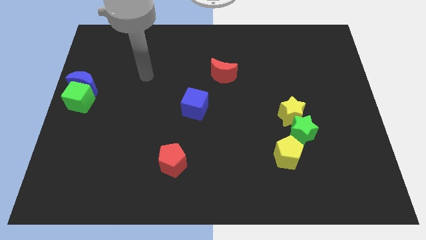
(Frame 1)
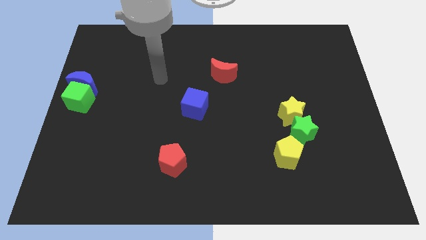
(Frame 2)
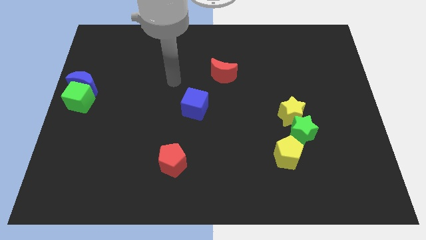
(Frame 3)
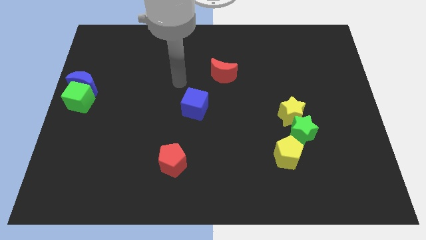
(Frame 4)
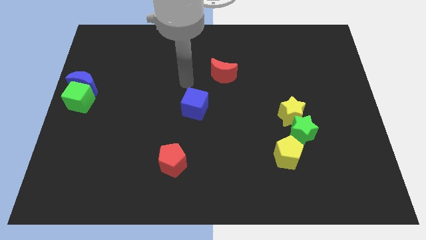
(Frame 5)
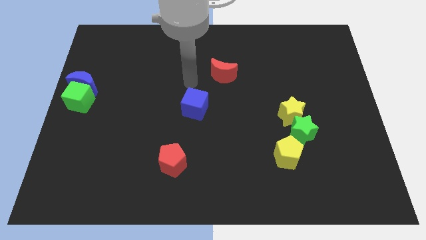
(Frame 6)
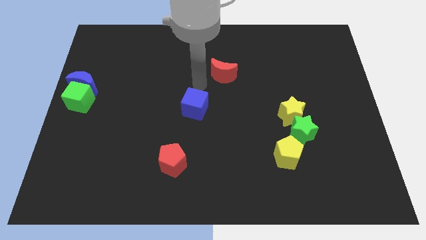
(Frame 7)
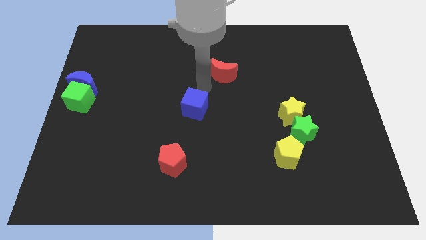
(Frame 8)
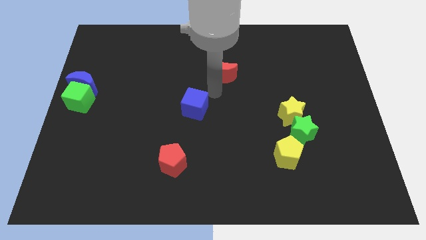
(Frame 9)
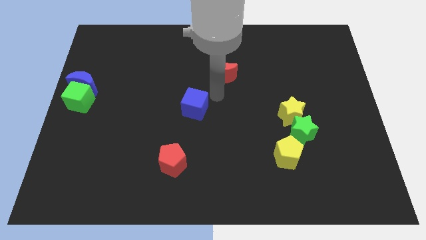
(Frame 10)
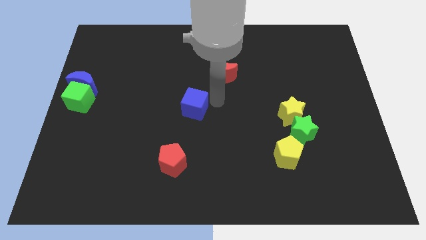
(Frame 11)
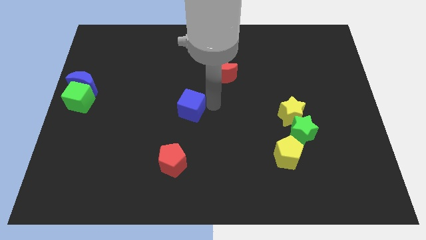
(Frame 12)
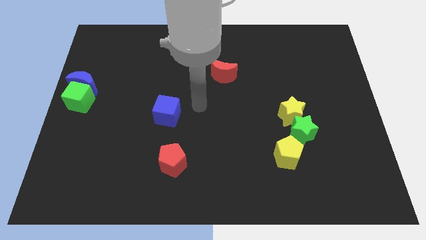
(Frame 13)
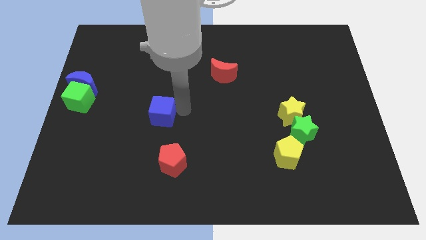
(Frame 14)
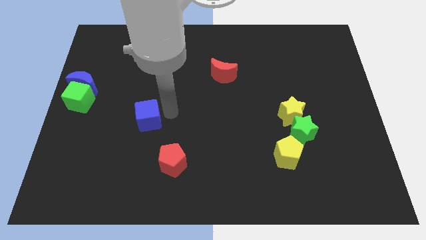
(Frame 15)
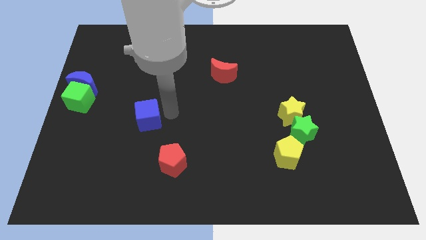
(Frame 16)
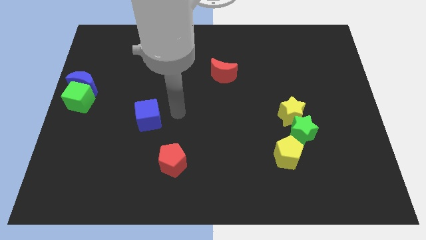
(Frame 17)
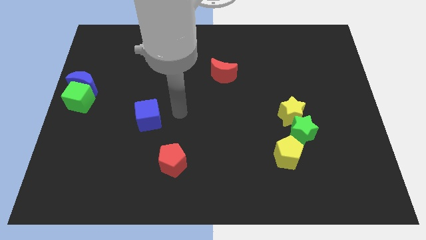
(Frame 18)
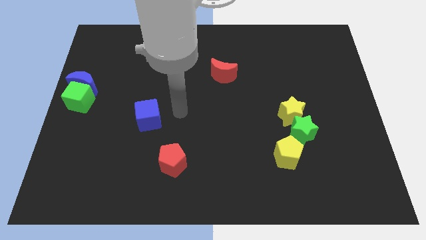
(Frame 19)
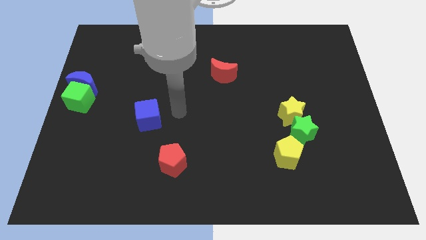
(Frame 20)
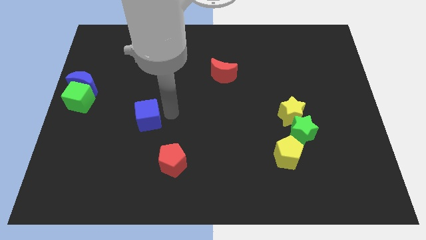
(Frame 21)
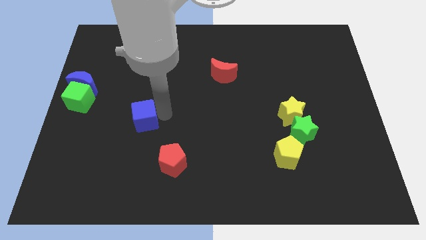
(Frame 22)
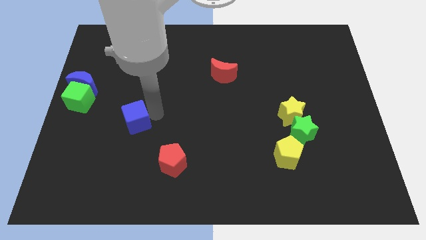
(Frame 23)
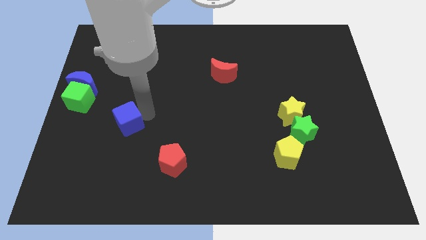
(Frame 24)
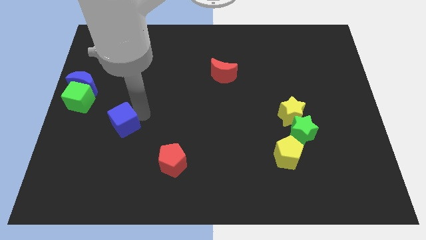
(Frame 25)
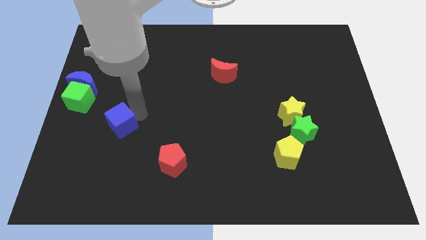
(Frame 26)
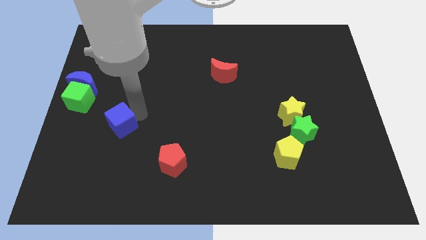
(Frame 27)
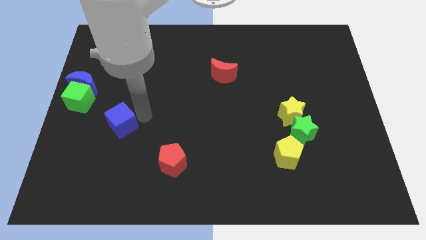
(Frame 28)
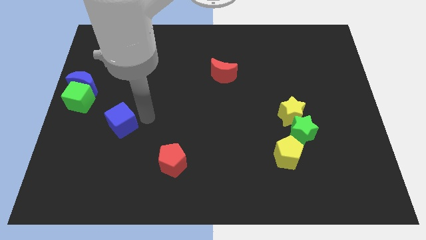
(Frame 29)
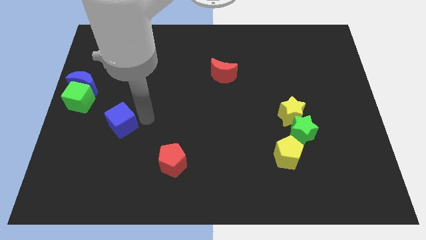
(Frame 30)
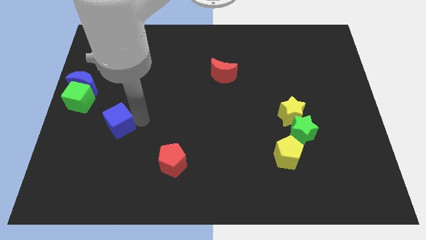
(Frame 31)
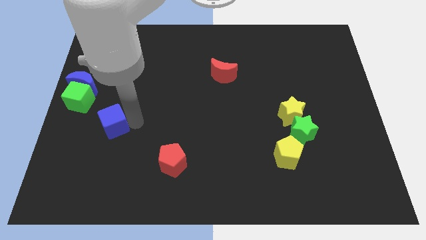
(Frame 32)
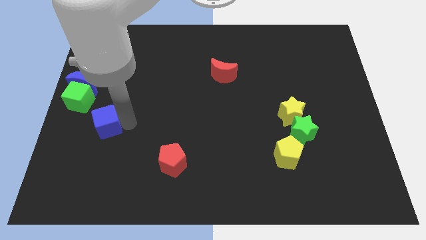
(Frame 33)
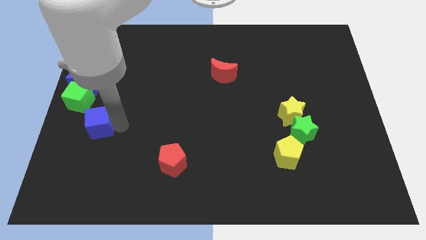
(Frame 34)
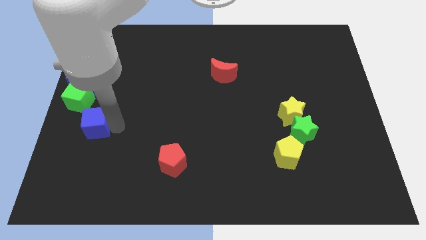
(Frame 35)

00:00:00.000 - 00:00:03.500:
move blue cube towards left

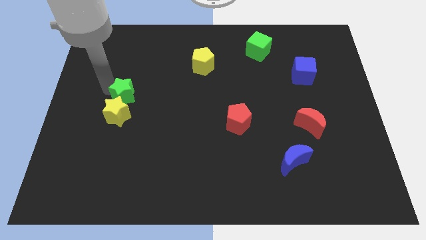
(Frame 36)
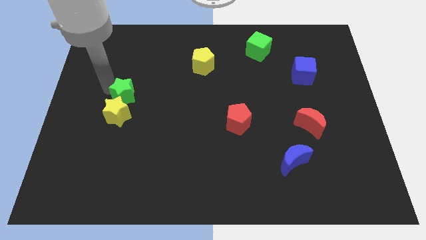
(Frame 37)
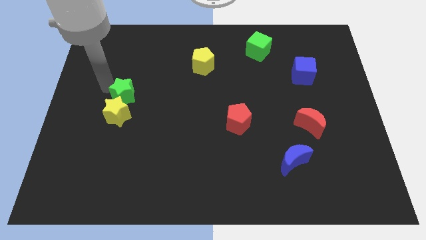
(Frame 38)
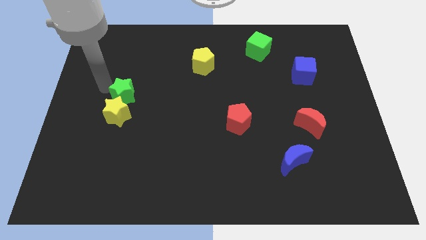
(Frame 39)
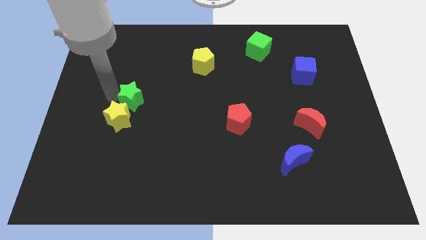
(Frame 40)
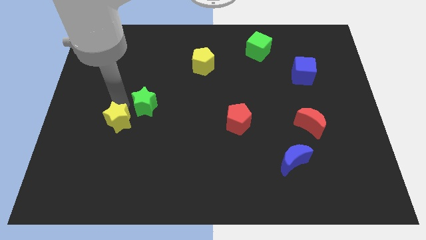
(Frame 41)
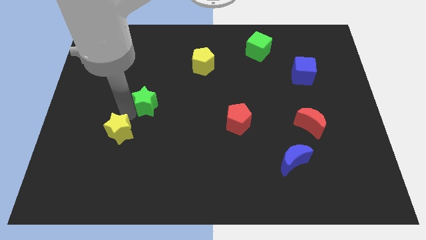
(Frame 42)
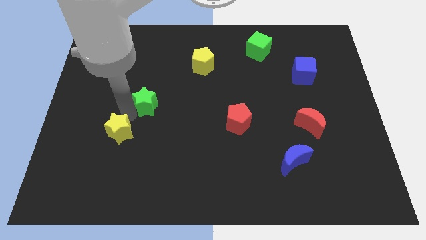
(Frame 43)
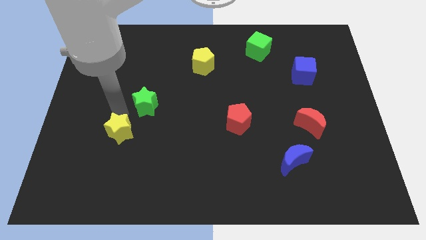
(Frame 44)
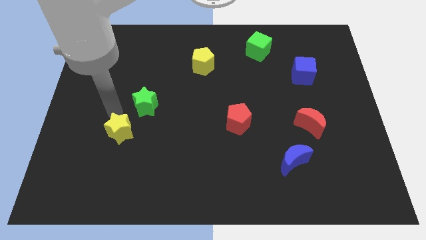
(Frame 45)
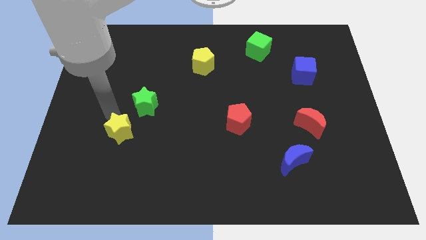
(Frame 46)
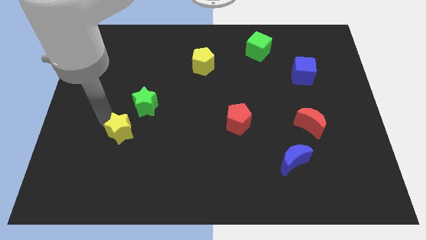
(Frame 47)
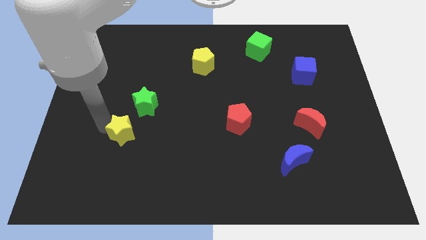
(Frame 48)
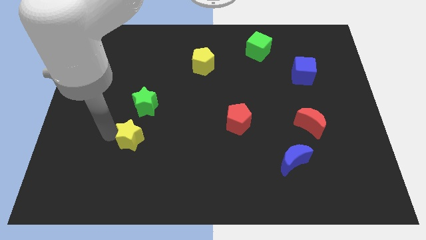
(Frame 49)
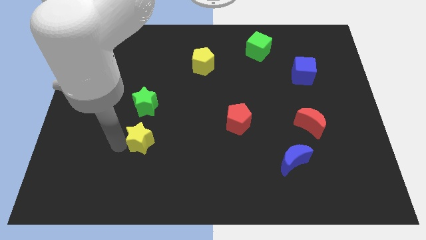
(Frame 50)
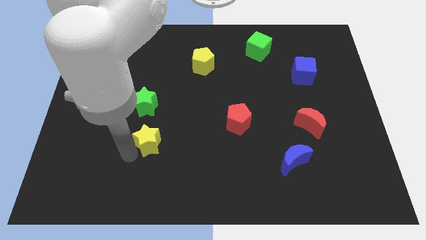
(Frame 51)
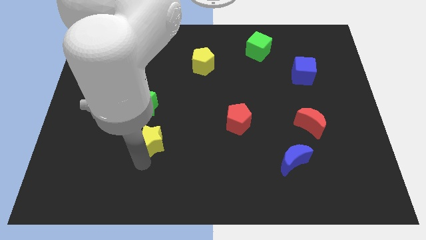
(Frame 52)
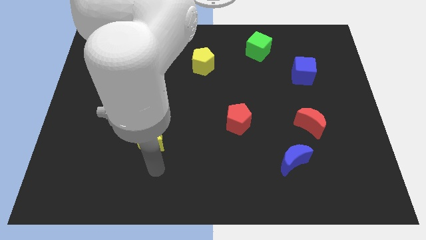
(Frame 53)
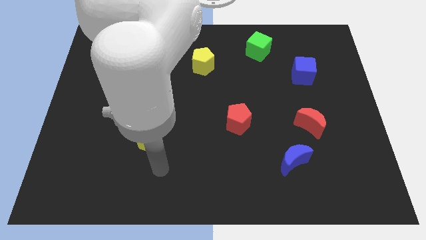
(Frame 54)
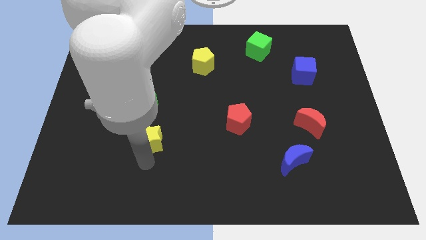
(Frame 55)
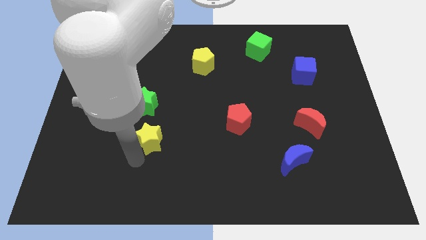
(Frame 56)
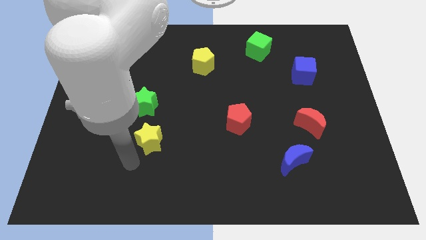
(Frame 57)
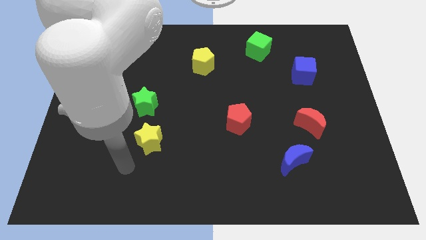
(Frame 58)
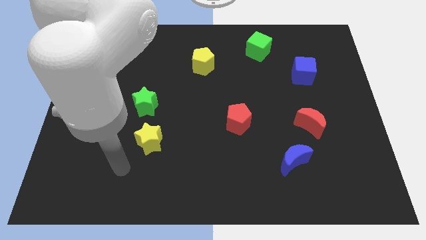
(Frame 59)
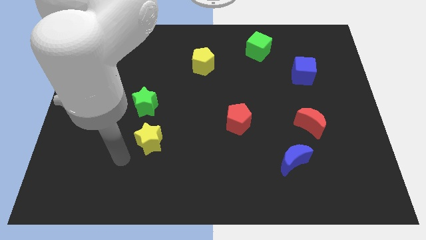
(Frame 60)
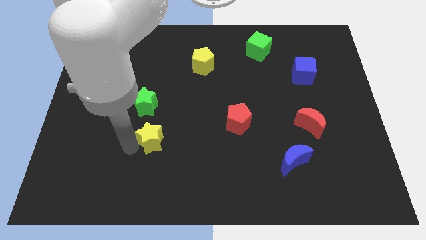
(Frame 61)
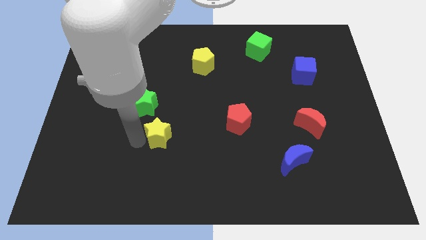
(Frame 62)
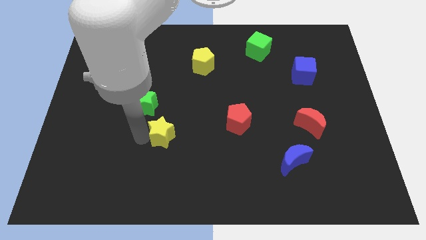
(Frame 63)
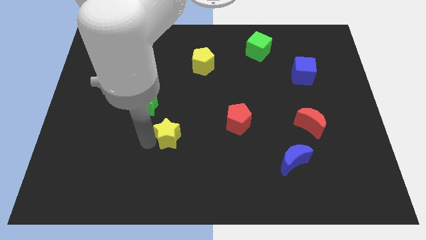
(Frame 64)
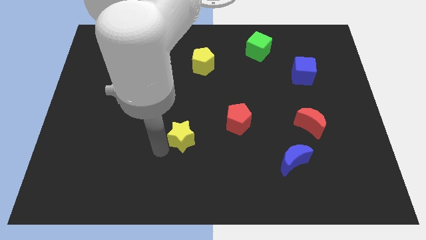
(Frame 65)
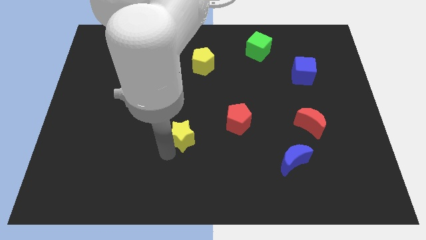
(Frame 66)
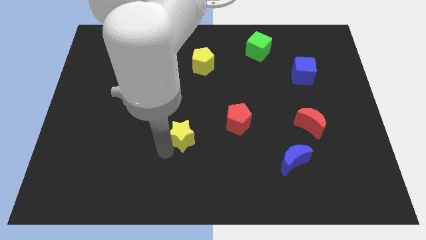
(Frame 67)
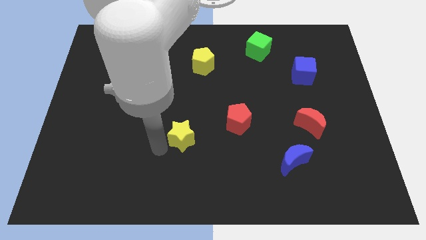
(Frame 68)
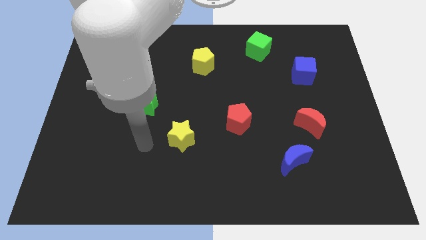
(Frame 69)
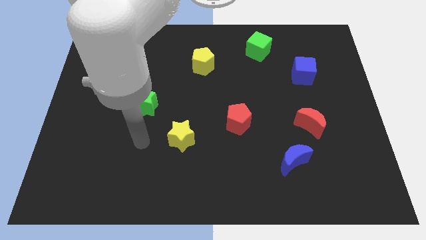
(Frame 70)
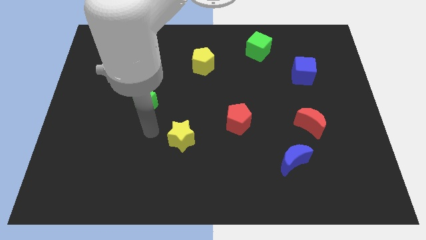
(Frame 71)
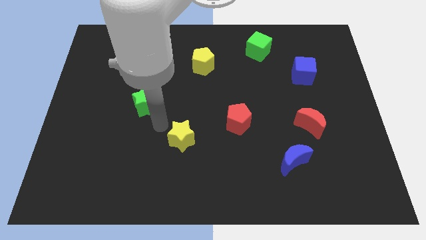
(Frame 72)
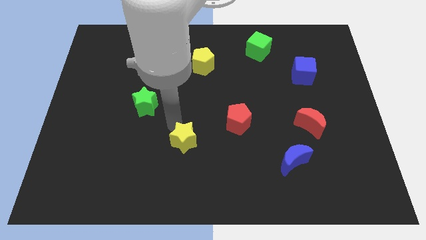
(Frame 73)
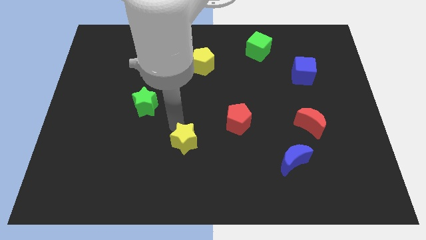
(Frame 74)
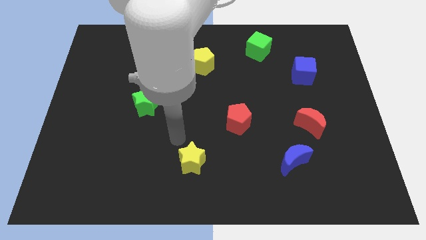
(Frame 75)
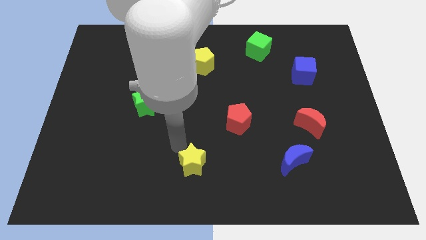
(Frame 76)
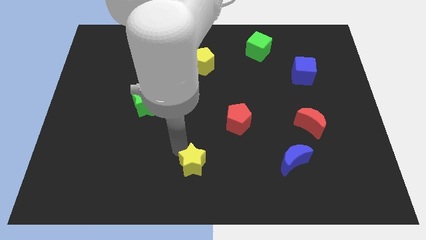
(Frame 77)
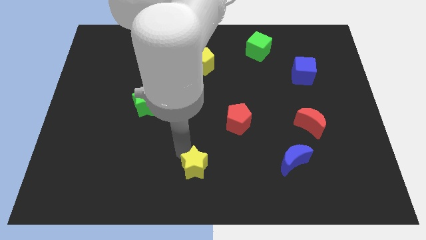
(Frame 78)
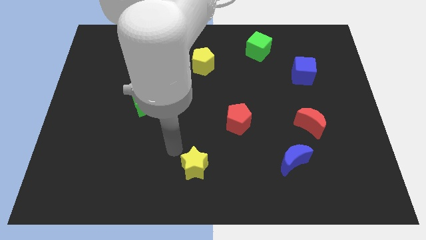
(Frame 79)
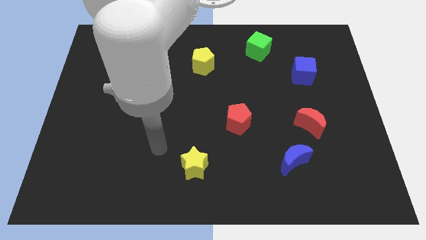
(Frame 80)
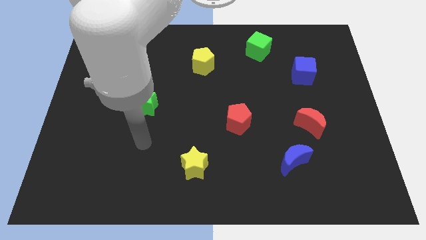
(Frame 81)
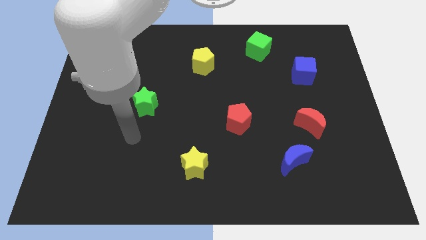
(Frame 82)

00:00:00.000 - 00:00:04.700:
place the yellow star below the yellow pentagon

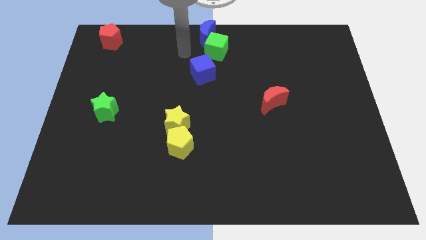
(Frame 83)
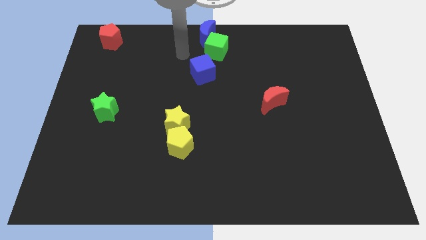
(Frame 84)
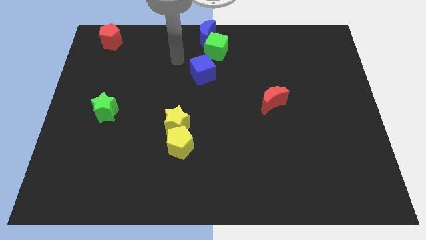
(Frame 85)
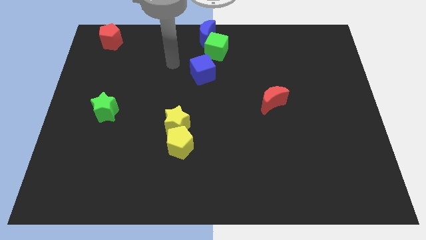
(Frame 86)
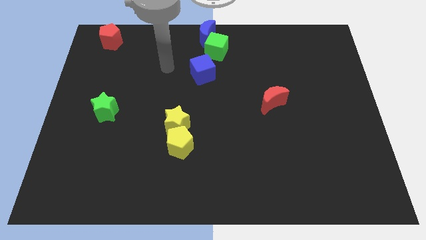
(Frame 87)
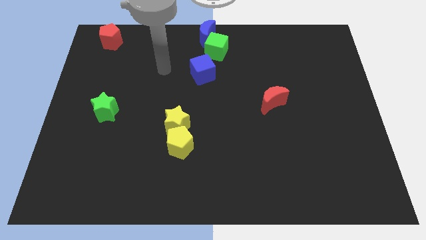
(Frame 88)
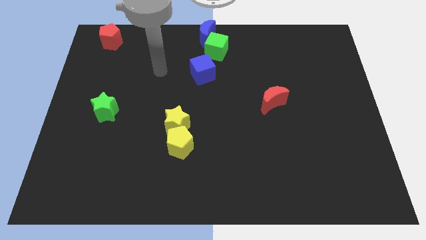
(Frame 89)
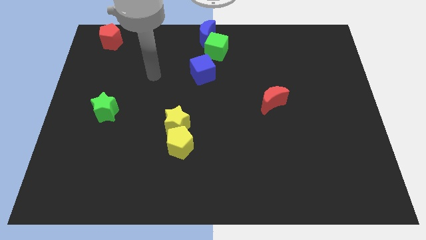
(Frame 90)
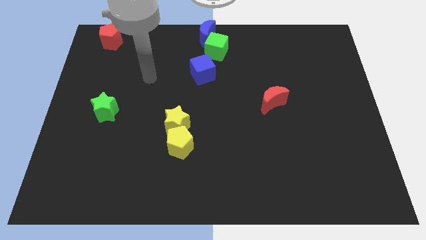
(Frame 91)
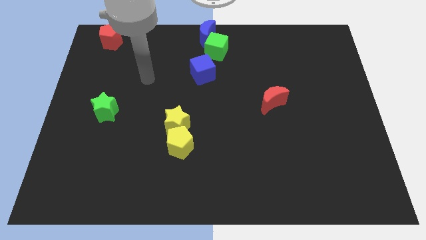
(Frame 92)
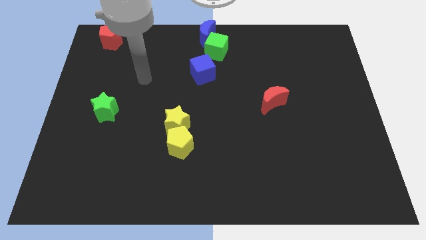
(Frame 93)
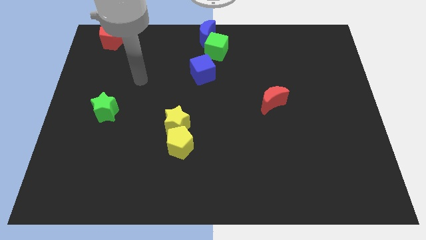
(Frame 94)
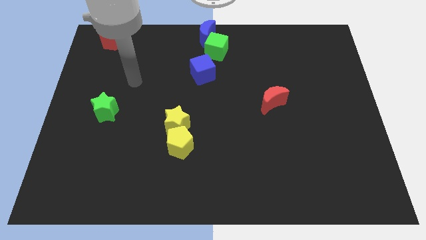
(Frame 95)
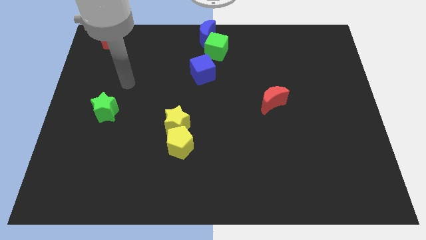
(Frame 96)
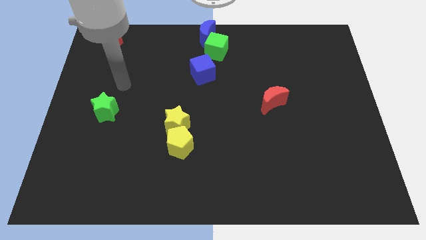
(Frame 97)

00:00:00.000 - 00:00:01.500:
move your hand towards green star
